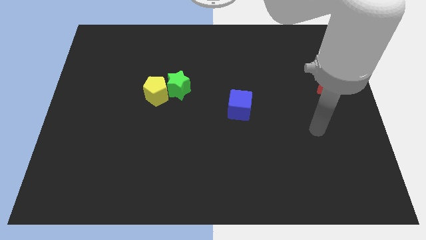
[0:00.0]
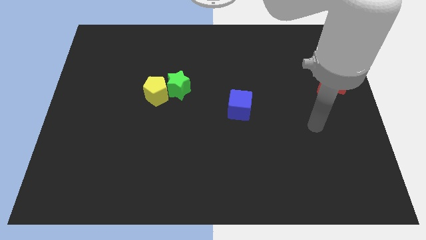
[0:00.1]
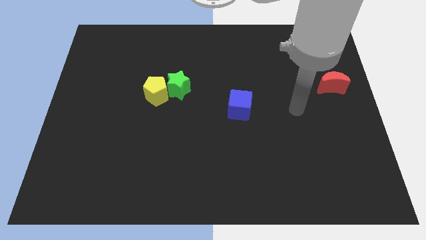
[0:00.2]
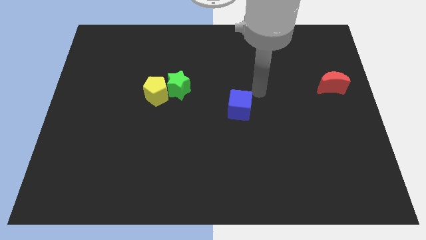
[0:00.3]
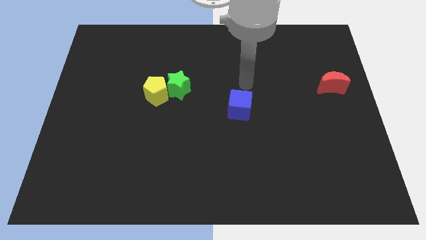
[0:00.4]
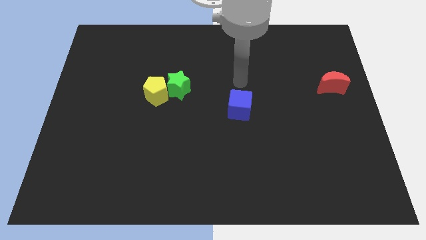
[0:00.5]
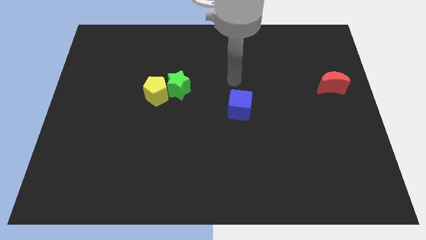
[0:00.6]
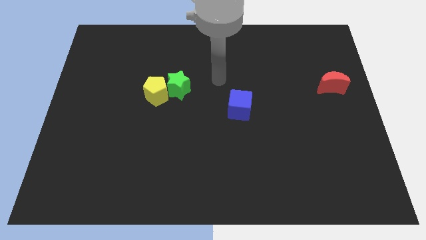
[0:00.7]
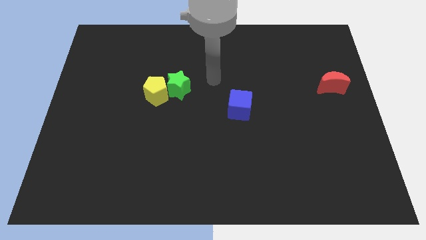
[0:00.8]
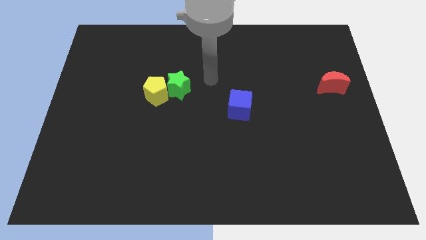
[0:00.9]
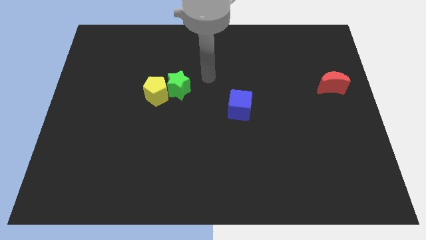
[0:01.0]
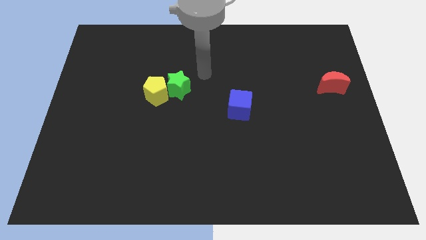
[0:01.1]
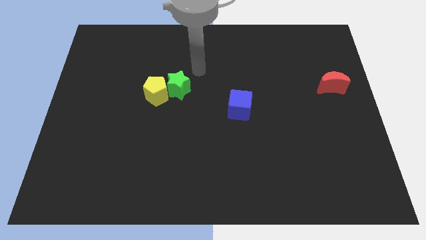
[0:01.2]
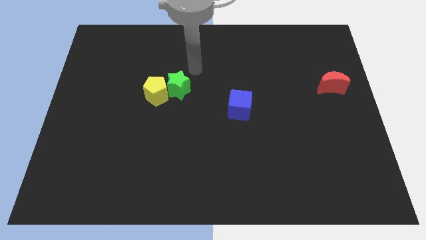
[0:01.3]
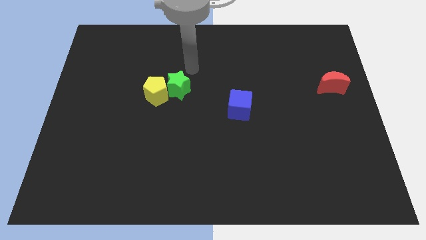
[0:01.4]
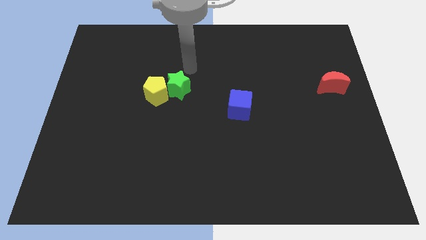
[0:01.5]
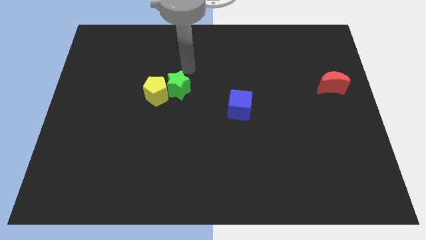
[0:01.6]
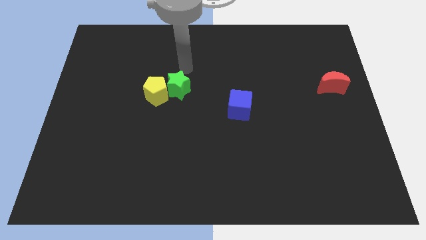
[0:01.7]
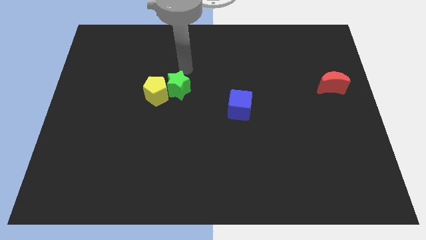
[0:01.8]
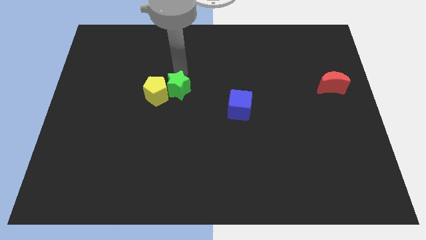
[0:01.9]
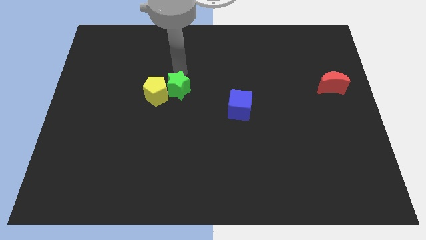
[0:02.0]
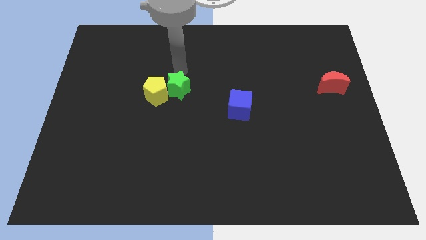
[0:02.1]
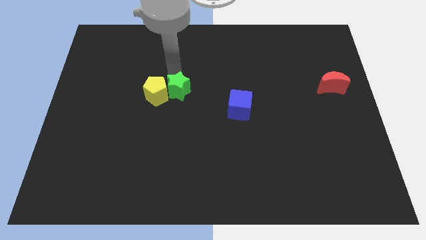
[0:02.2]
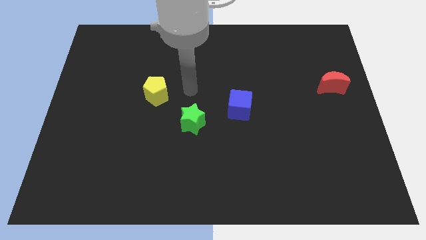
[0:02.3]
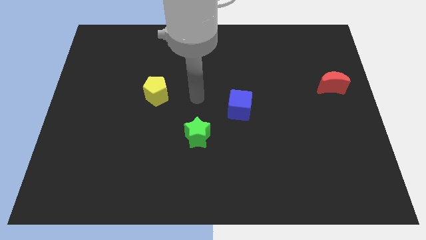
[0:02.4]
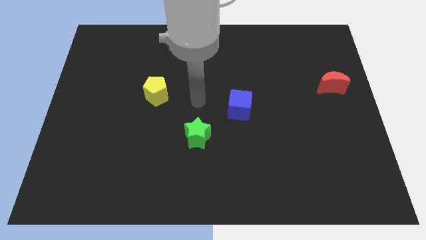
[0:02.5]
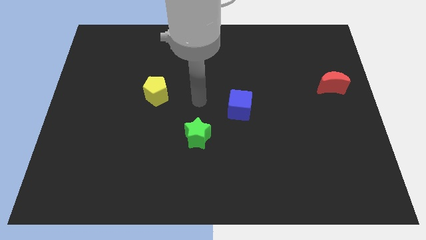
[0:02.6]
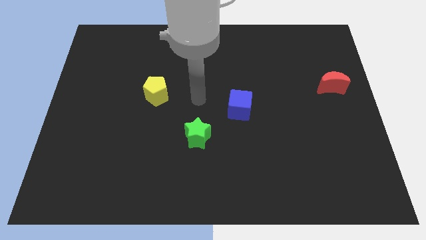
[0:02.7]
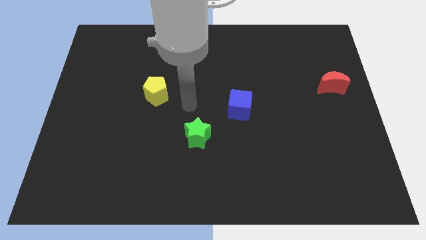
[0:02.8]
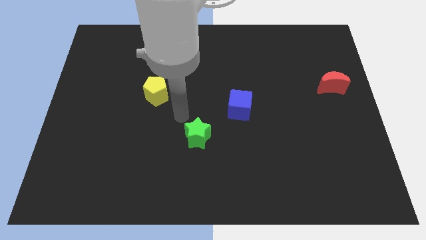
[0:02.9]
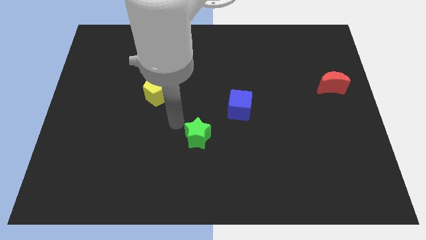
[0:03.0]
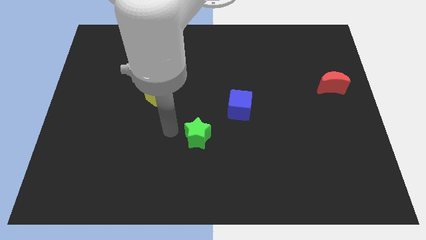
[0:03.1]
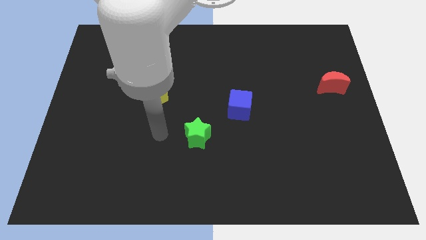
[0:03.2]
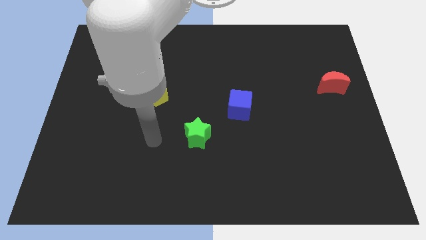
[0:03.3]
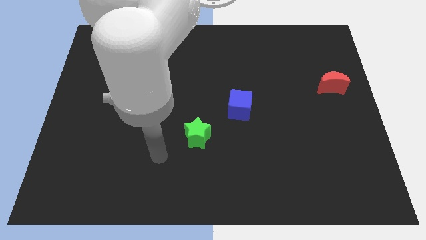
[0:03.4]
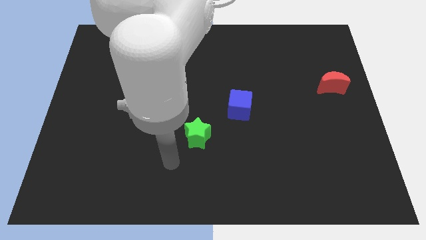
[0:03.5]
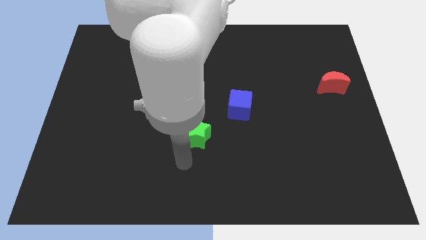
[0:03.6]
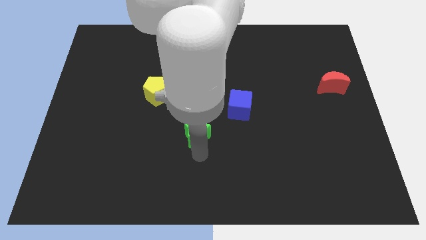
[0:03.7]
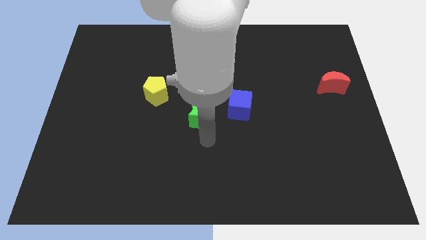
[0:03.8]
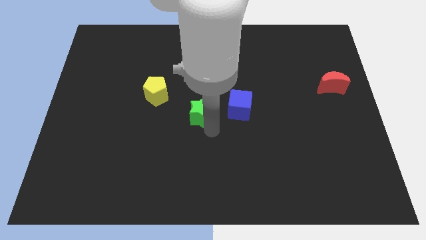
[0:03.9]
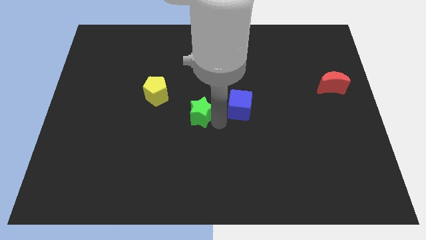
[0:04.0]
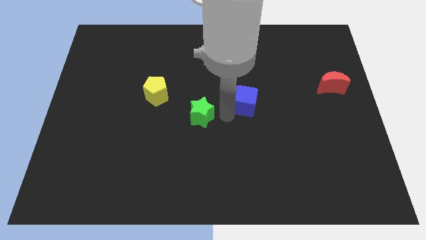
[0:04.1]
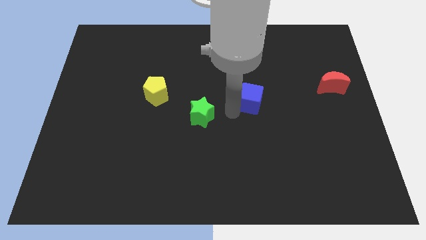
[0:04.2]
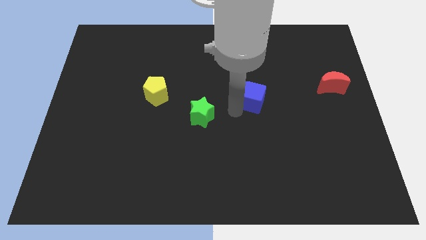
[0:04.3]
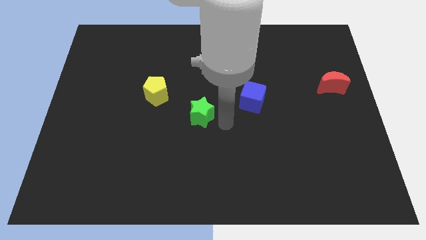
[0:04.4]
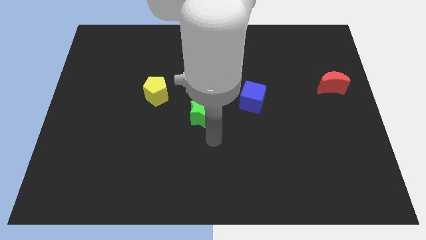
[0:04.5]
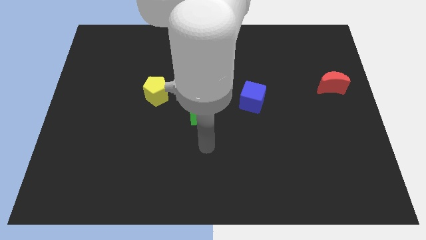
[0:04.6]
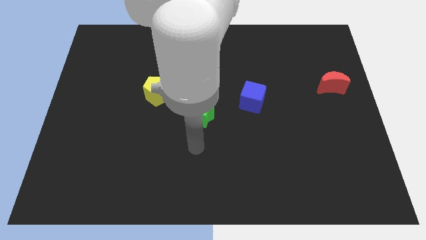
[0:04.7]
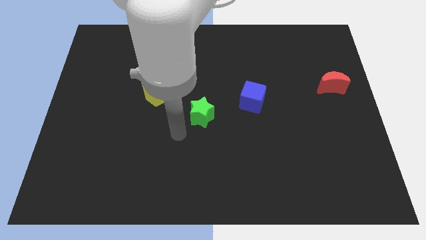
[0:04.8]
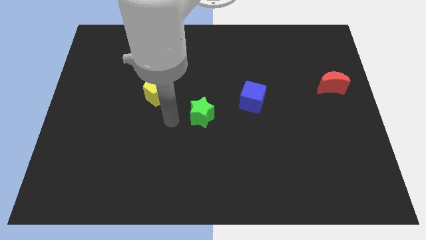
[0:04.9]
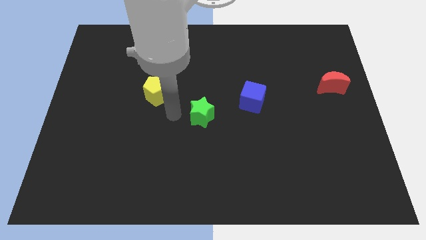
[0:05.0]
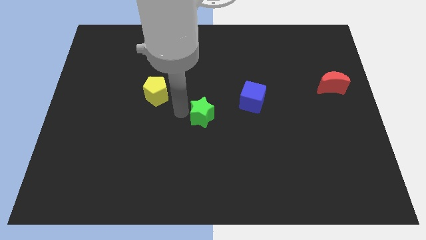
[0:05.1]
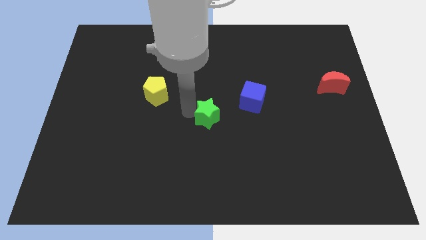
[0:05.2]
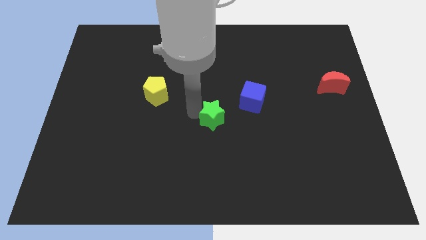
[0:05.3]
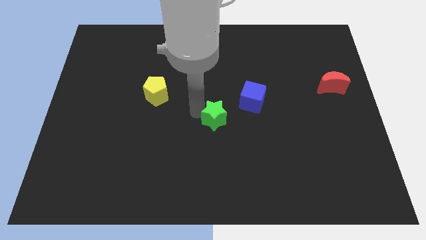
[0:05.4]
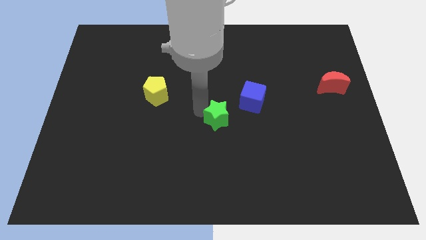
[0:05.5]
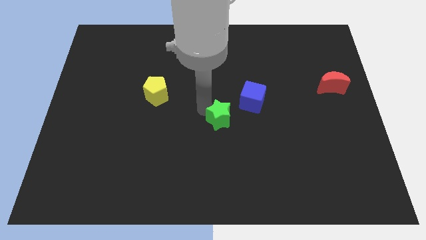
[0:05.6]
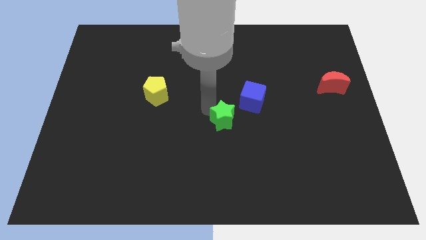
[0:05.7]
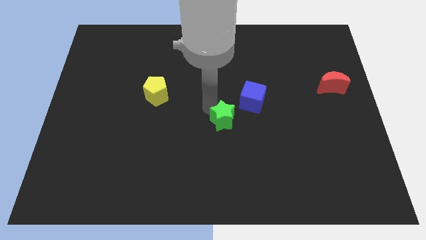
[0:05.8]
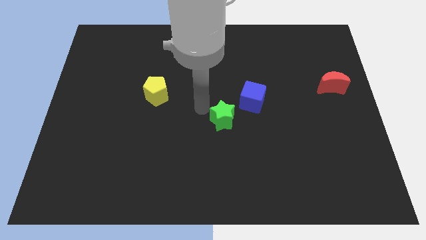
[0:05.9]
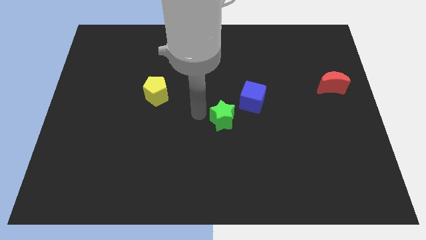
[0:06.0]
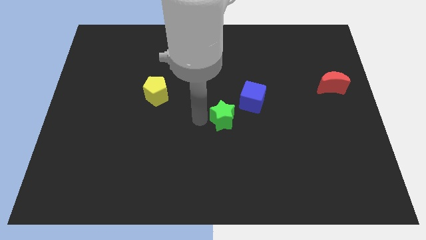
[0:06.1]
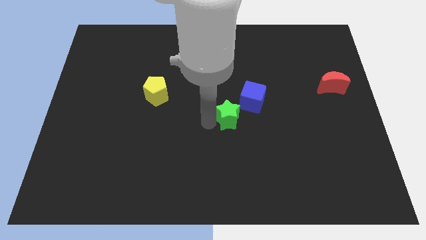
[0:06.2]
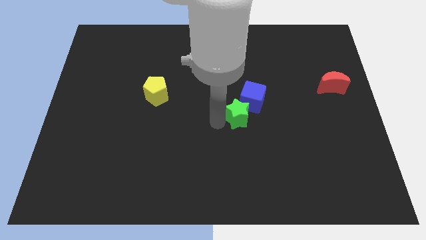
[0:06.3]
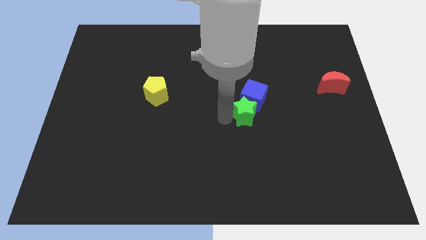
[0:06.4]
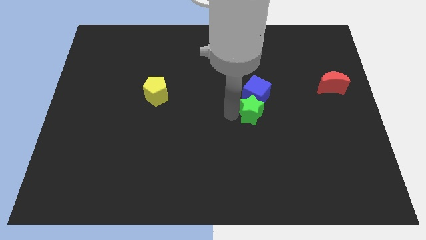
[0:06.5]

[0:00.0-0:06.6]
move the star towards the cube

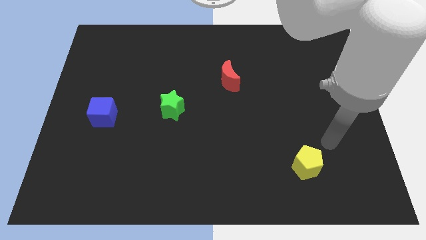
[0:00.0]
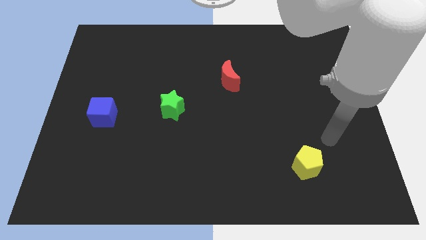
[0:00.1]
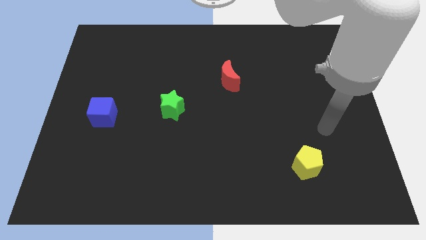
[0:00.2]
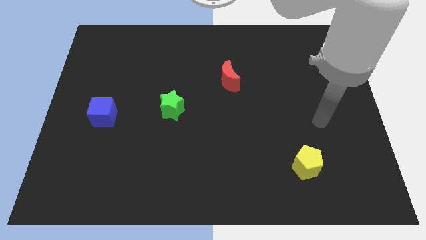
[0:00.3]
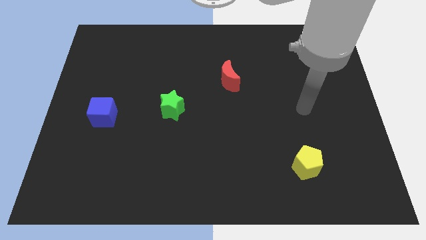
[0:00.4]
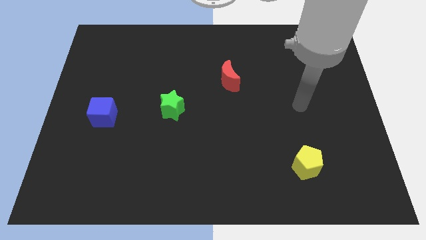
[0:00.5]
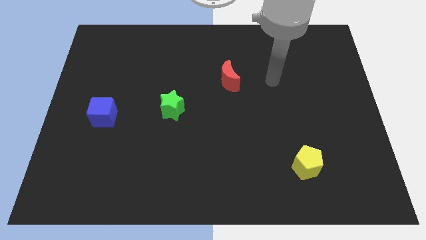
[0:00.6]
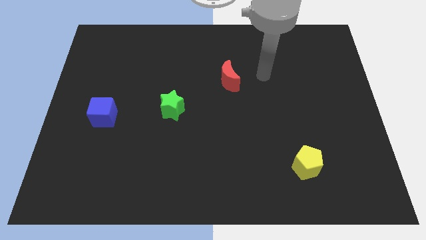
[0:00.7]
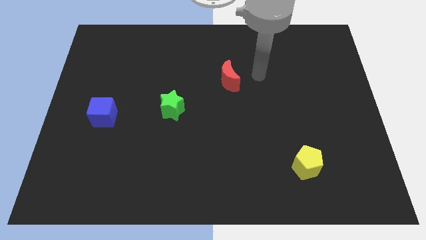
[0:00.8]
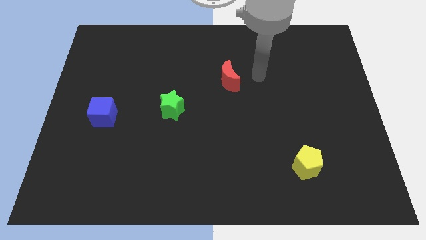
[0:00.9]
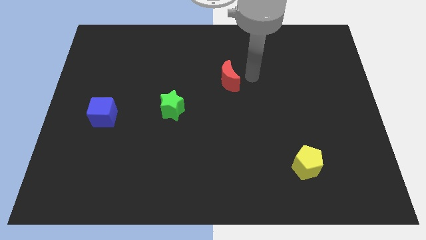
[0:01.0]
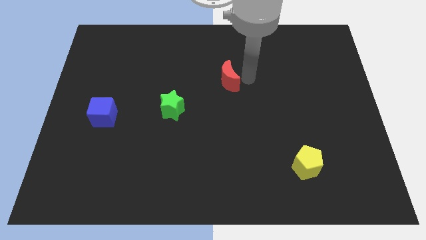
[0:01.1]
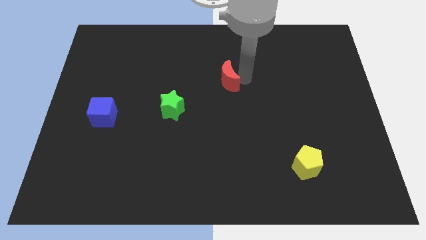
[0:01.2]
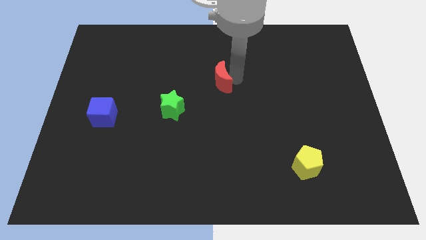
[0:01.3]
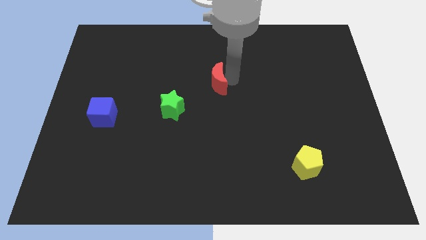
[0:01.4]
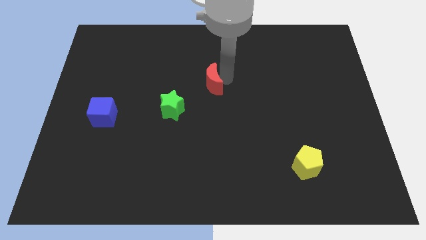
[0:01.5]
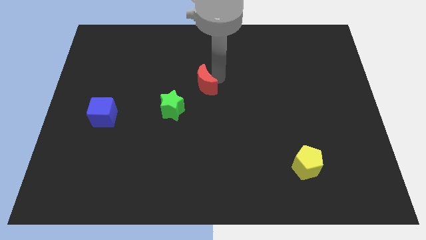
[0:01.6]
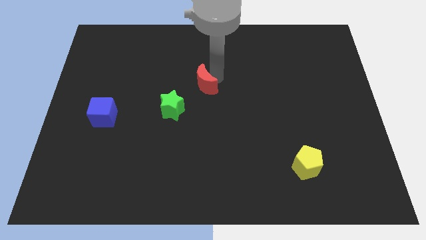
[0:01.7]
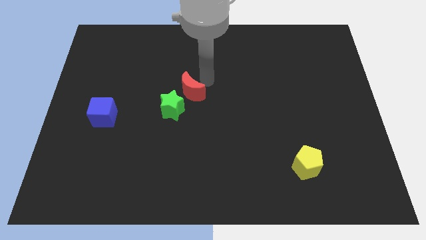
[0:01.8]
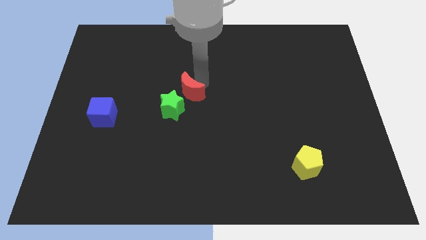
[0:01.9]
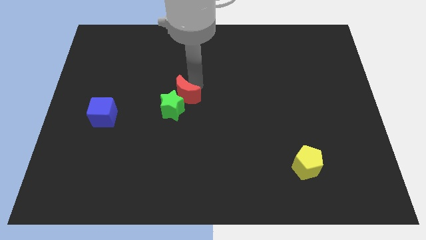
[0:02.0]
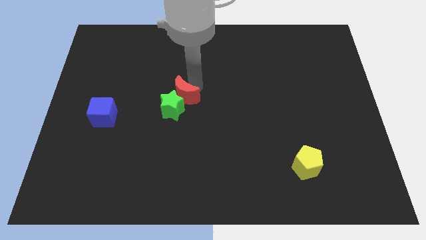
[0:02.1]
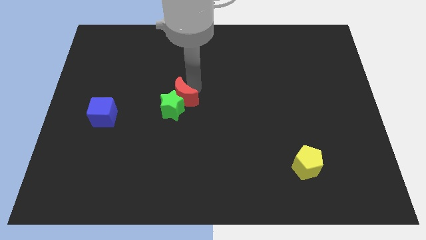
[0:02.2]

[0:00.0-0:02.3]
move the red block next to the green block
